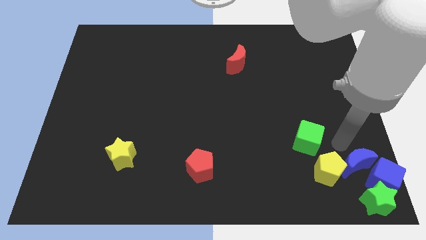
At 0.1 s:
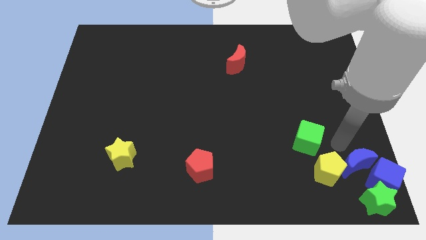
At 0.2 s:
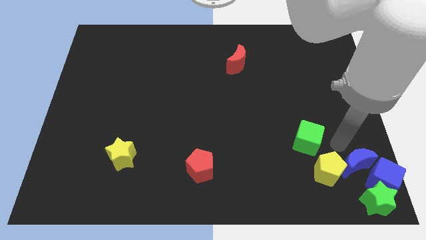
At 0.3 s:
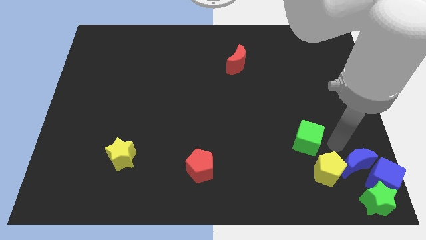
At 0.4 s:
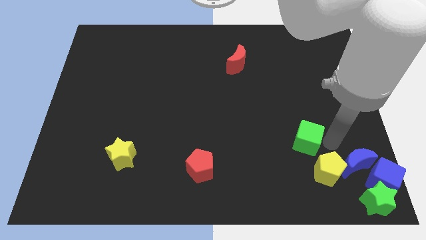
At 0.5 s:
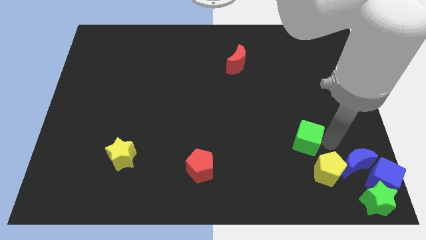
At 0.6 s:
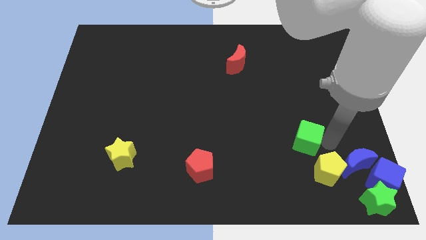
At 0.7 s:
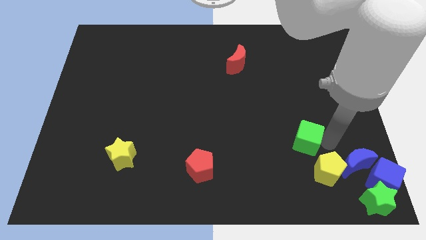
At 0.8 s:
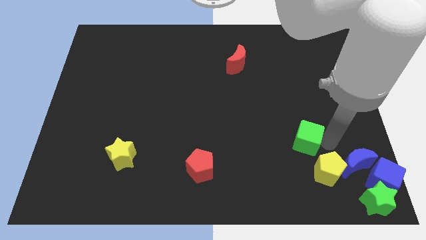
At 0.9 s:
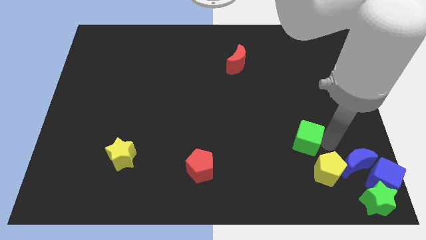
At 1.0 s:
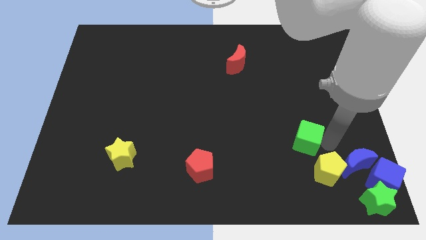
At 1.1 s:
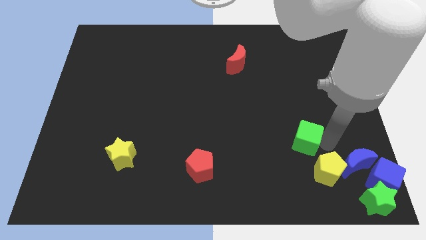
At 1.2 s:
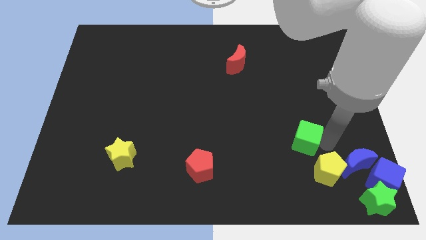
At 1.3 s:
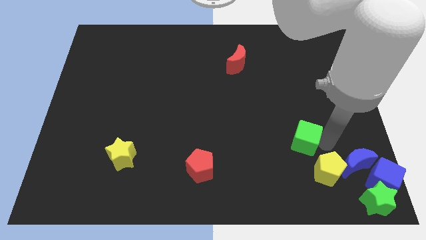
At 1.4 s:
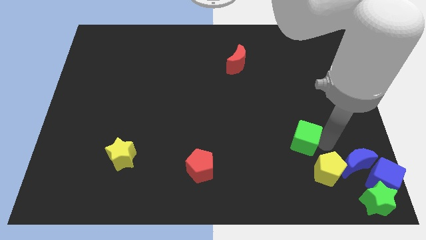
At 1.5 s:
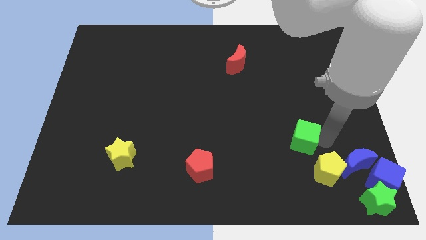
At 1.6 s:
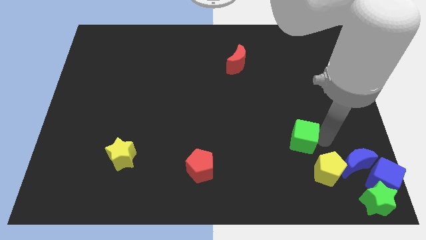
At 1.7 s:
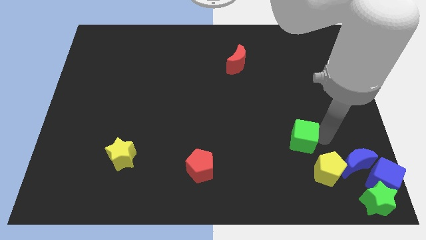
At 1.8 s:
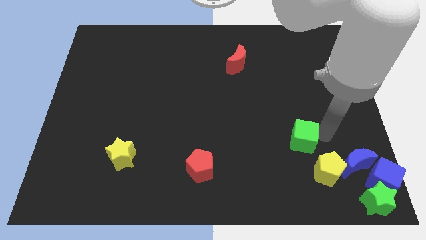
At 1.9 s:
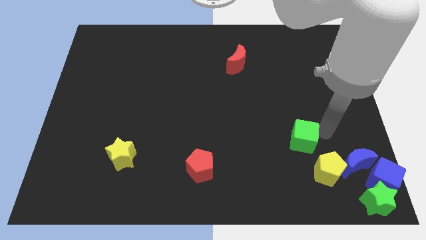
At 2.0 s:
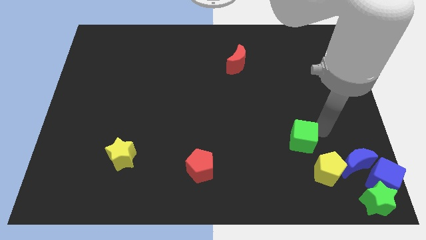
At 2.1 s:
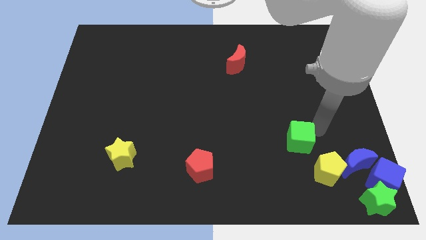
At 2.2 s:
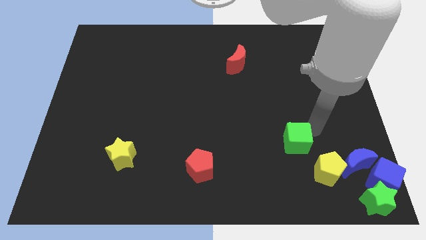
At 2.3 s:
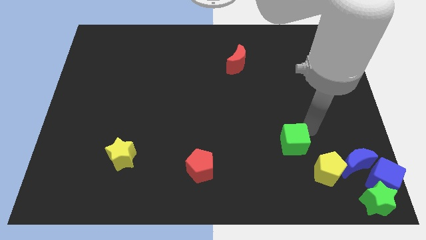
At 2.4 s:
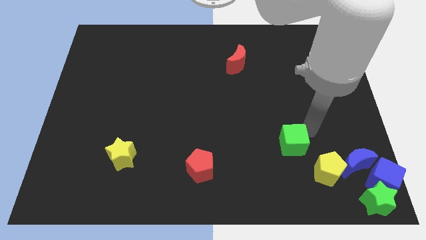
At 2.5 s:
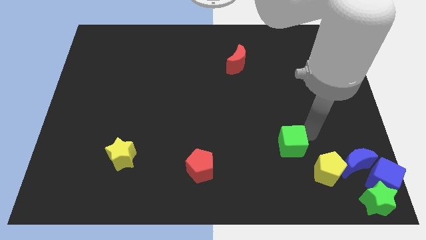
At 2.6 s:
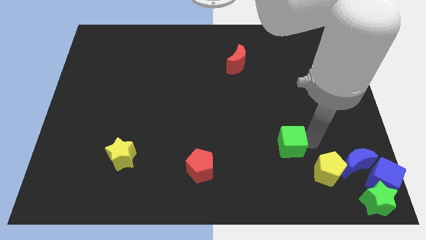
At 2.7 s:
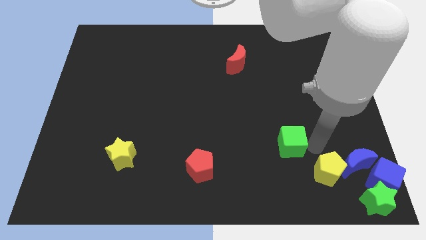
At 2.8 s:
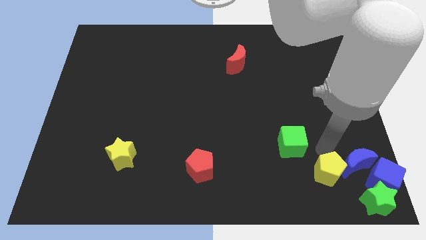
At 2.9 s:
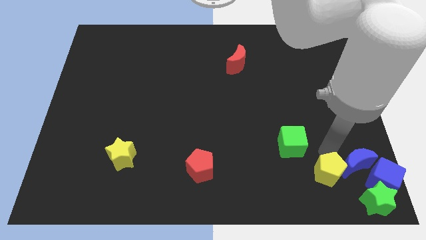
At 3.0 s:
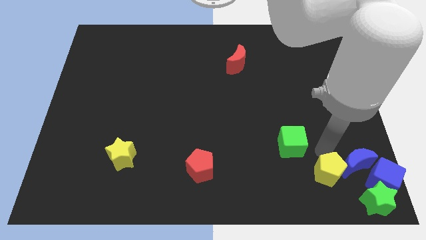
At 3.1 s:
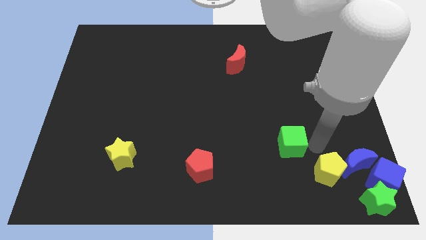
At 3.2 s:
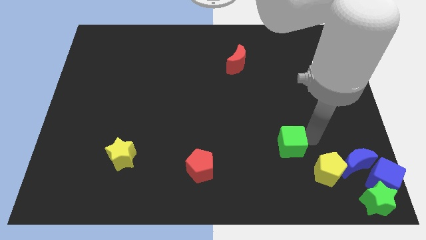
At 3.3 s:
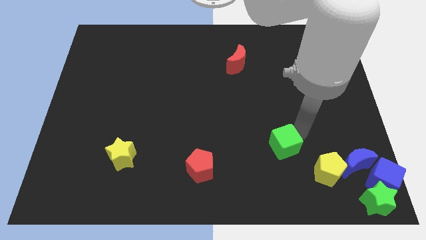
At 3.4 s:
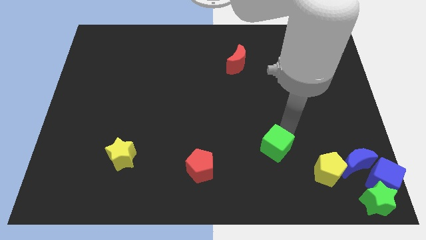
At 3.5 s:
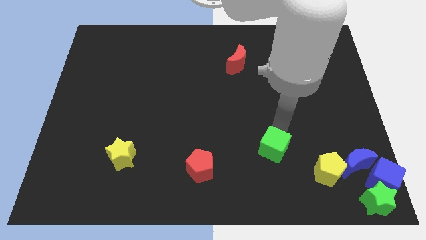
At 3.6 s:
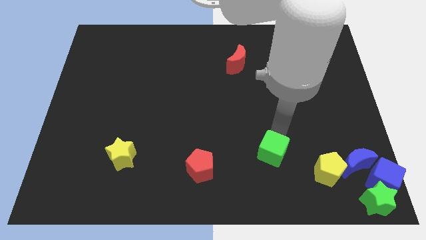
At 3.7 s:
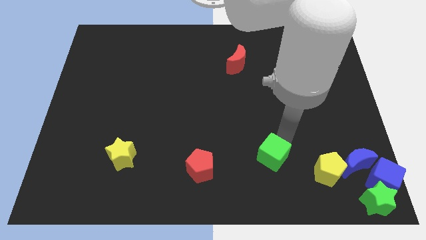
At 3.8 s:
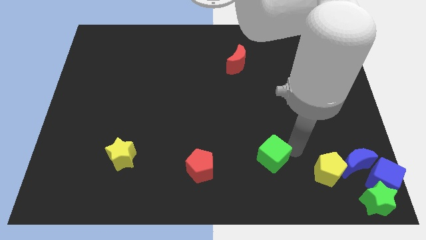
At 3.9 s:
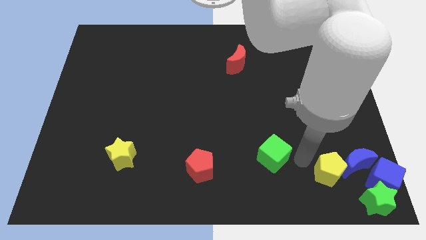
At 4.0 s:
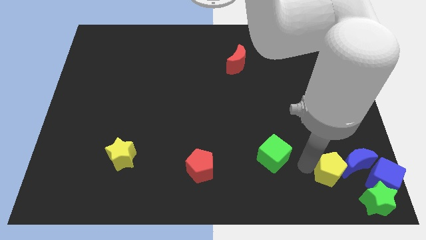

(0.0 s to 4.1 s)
push the green cube vertical to the yellow pentagon

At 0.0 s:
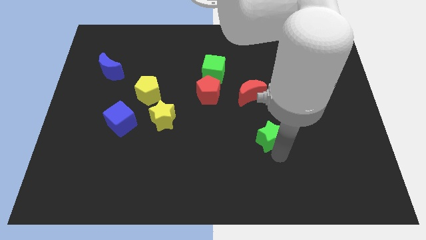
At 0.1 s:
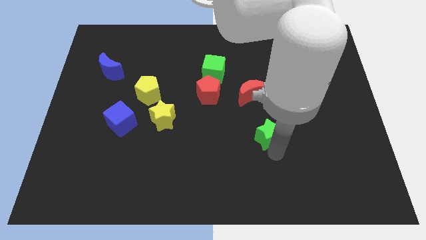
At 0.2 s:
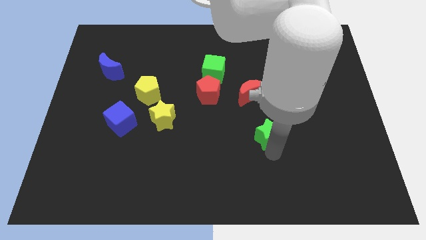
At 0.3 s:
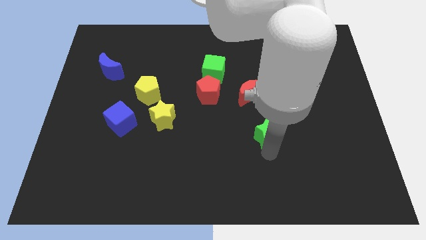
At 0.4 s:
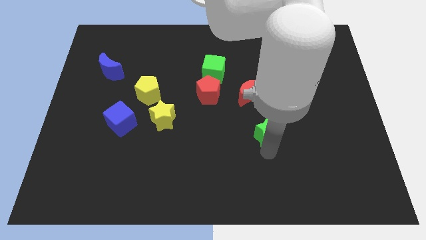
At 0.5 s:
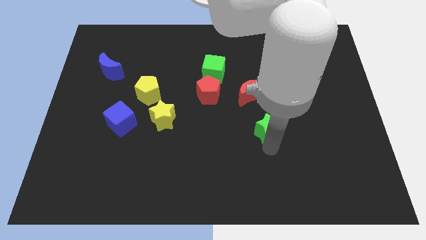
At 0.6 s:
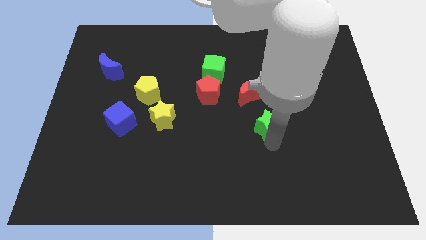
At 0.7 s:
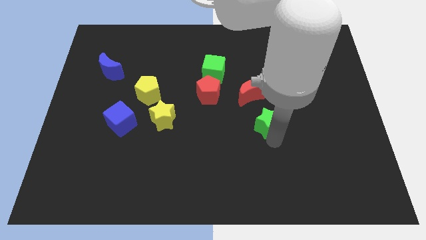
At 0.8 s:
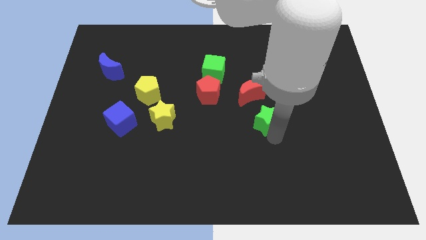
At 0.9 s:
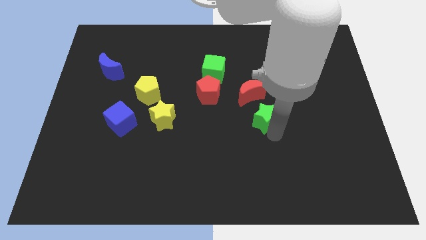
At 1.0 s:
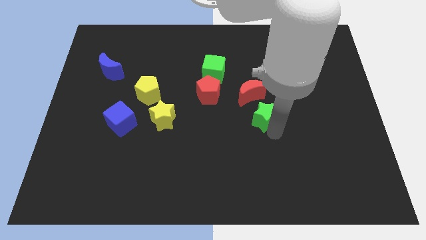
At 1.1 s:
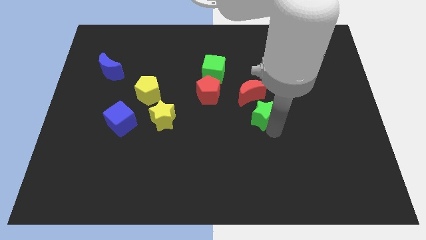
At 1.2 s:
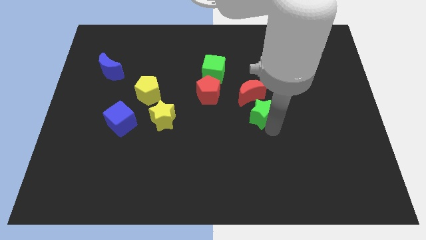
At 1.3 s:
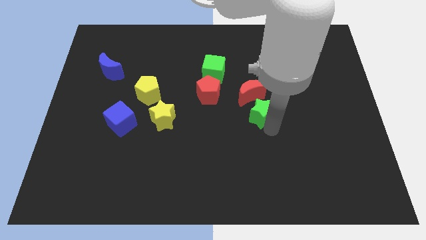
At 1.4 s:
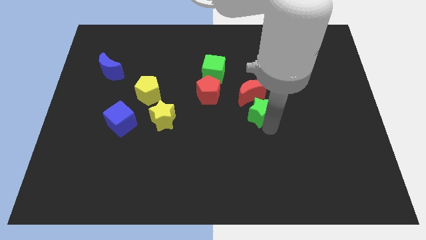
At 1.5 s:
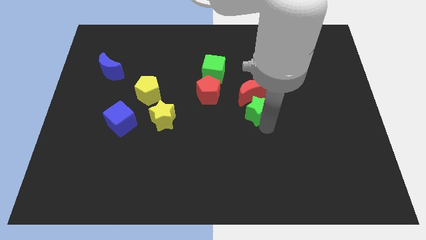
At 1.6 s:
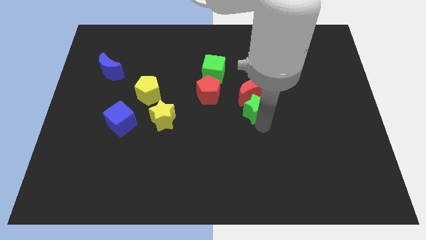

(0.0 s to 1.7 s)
slightly move the green star into the red crescent on the right side of the board

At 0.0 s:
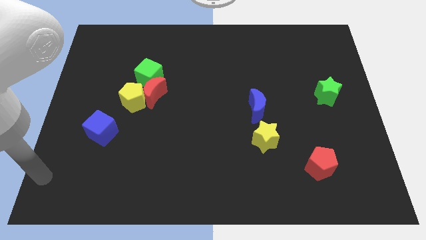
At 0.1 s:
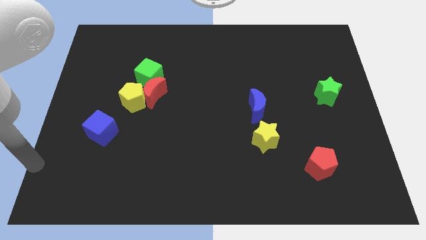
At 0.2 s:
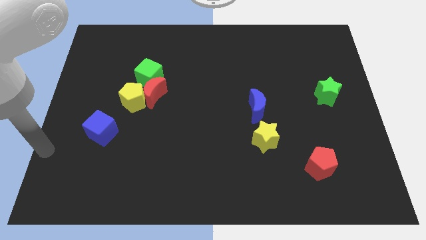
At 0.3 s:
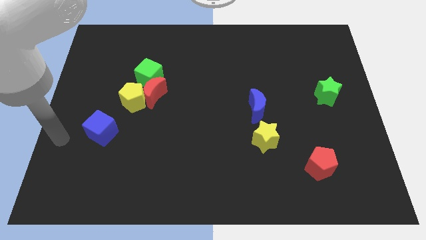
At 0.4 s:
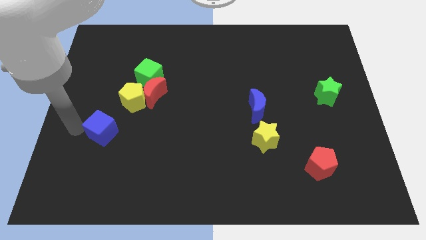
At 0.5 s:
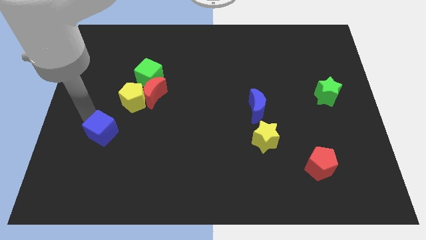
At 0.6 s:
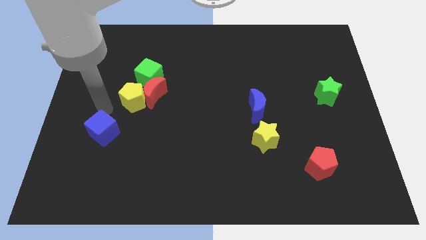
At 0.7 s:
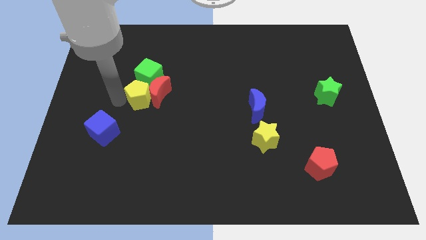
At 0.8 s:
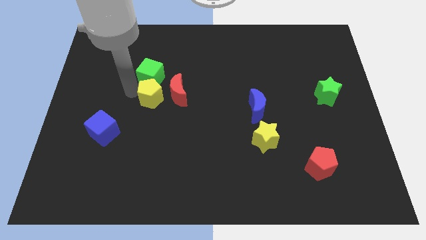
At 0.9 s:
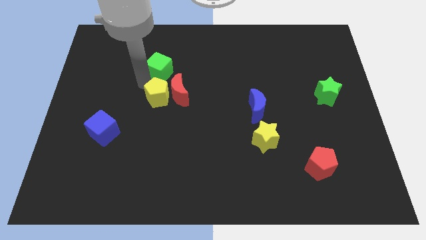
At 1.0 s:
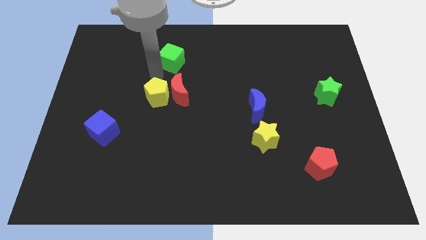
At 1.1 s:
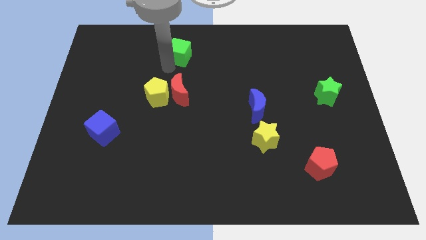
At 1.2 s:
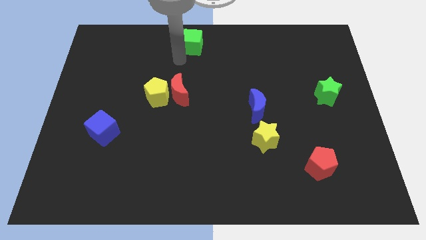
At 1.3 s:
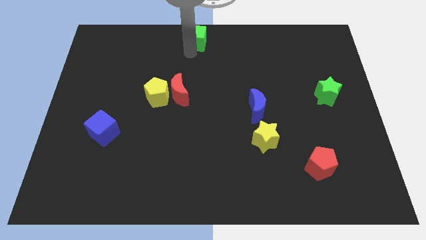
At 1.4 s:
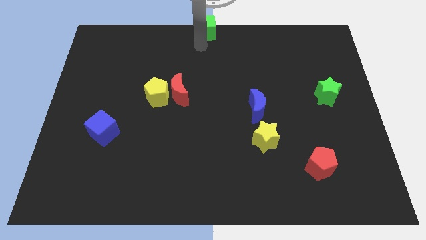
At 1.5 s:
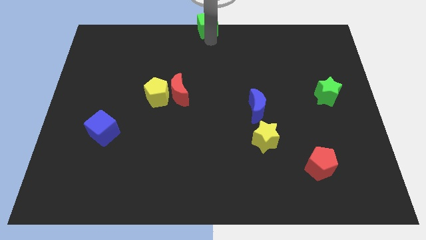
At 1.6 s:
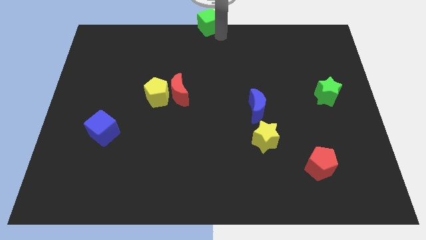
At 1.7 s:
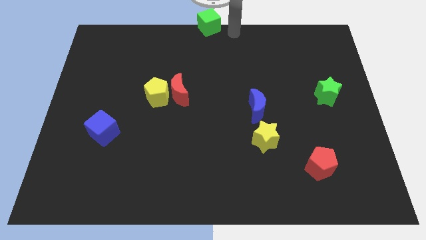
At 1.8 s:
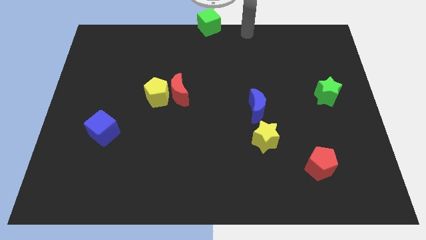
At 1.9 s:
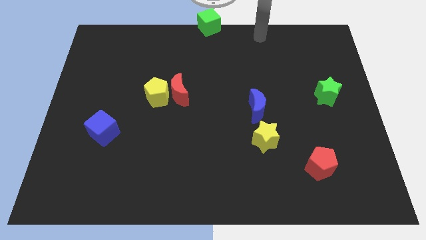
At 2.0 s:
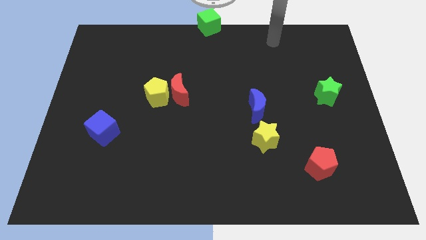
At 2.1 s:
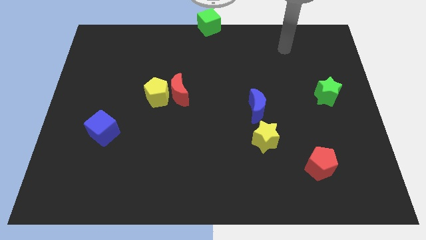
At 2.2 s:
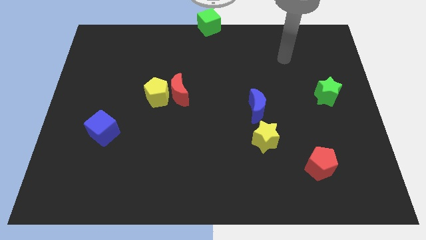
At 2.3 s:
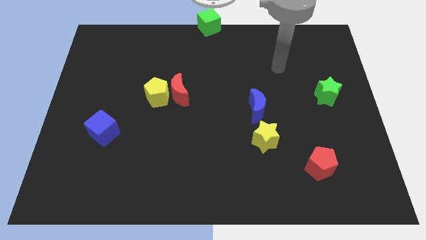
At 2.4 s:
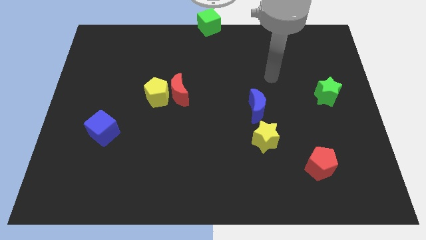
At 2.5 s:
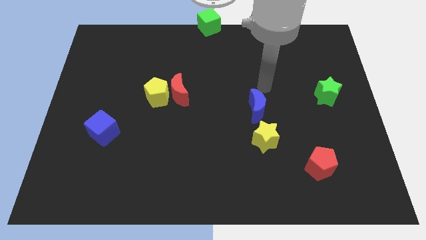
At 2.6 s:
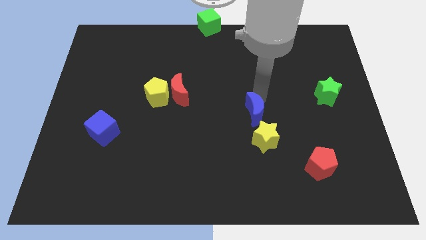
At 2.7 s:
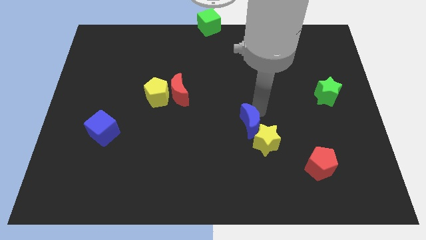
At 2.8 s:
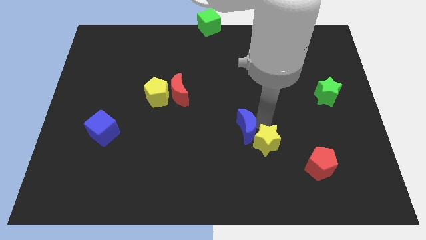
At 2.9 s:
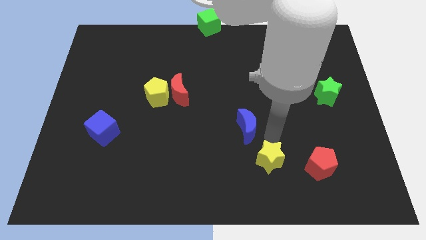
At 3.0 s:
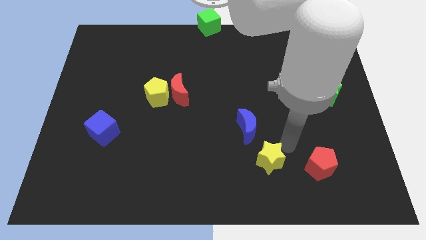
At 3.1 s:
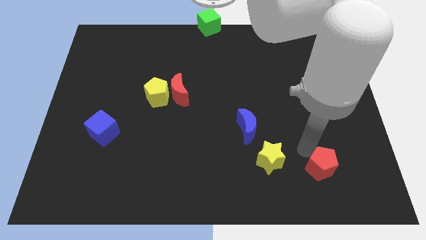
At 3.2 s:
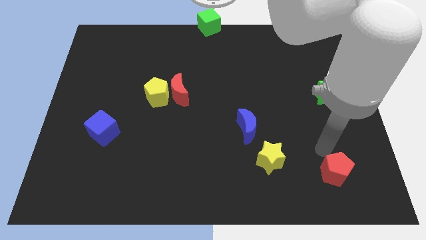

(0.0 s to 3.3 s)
separate the green cube and the yellow pentagon
